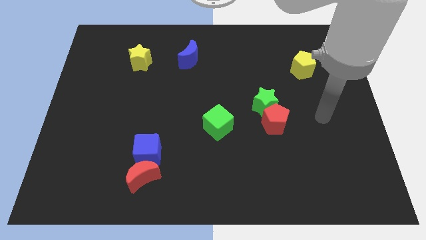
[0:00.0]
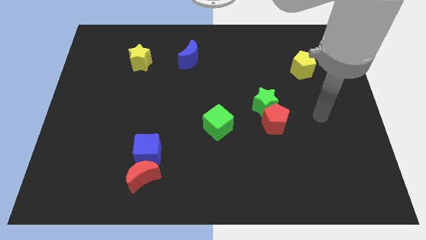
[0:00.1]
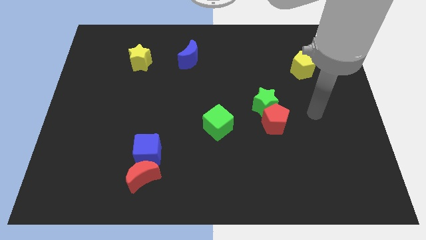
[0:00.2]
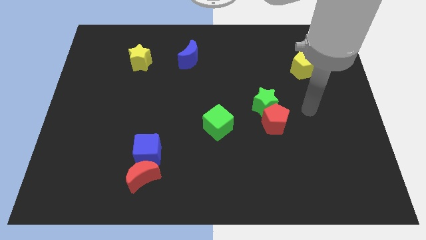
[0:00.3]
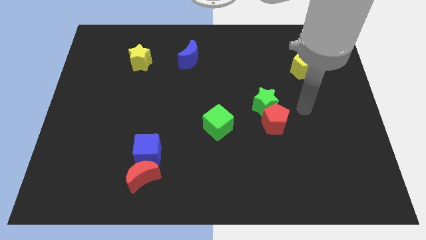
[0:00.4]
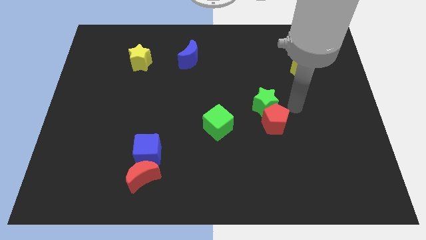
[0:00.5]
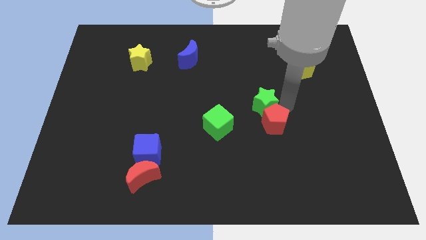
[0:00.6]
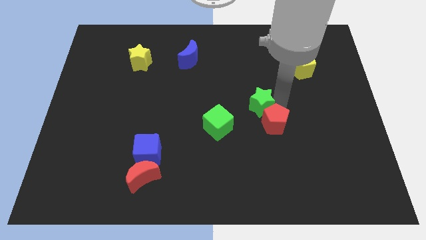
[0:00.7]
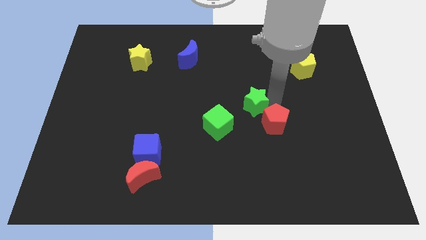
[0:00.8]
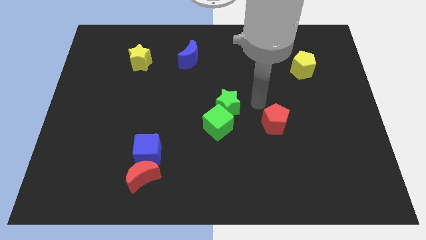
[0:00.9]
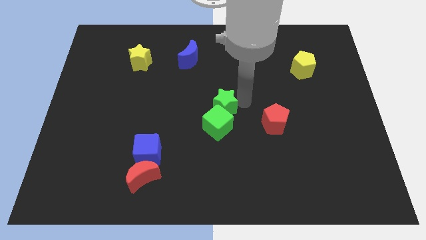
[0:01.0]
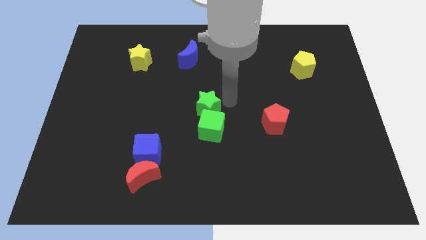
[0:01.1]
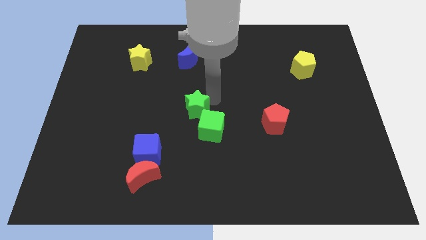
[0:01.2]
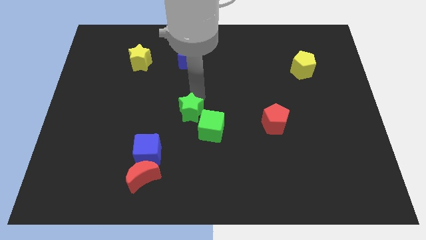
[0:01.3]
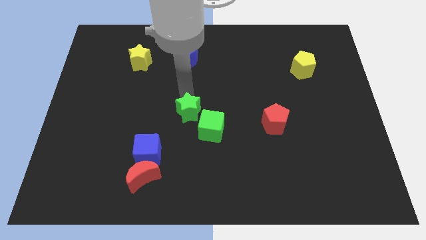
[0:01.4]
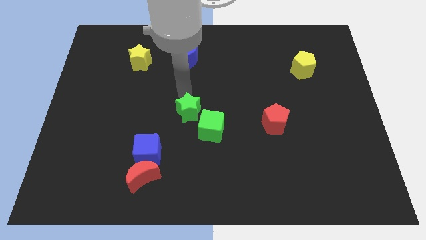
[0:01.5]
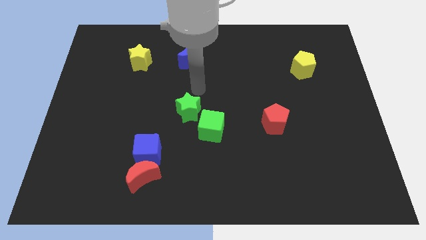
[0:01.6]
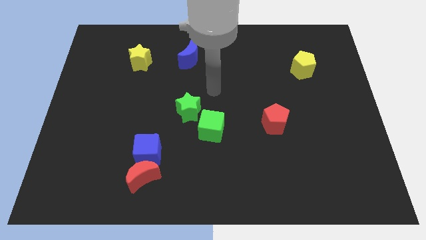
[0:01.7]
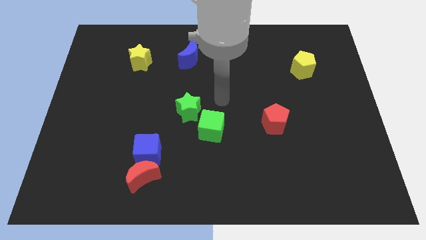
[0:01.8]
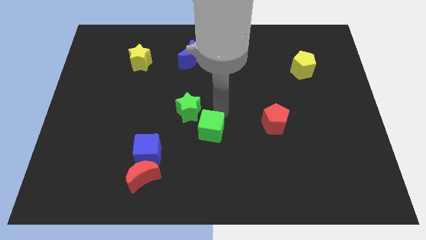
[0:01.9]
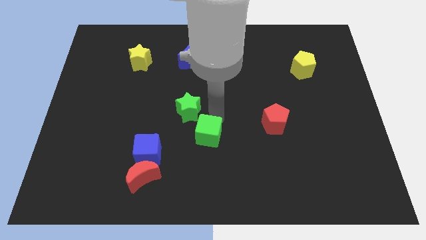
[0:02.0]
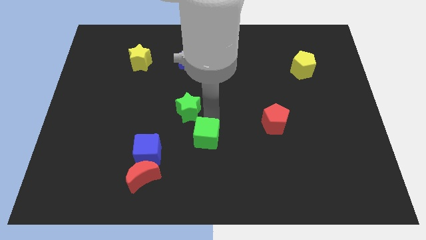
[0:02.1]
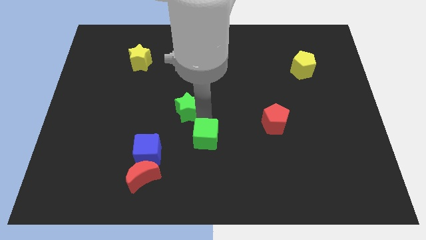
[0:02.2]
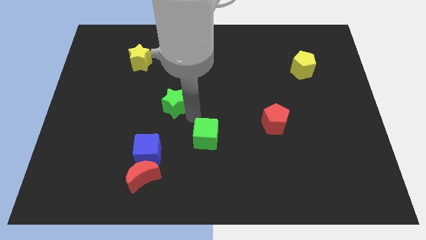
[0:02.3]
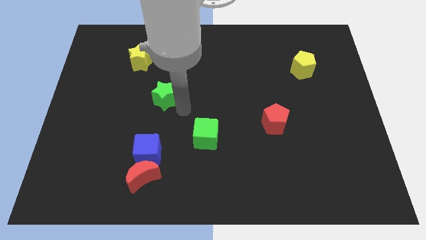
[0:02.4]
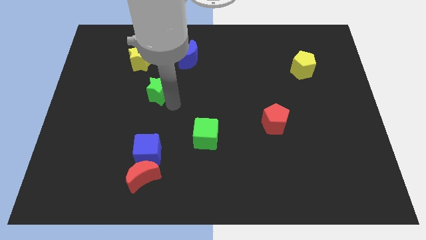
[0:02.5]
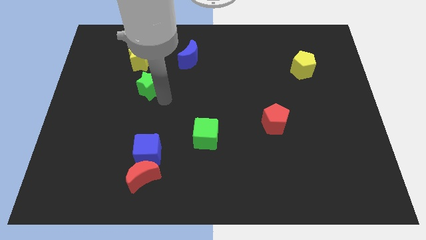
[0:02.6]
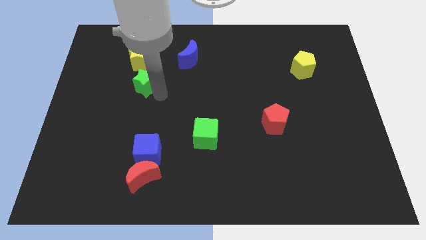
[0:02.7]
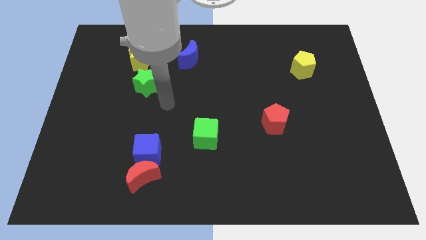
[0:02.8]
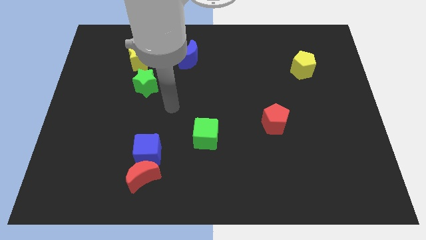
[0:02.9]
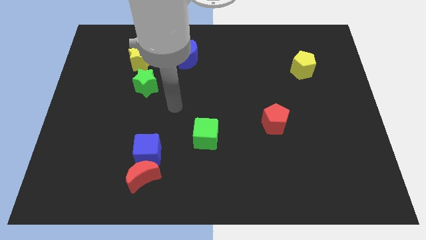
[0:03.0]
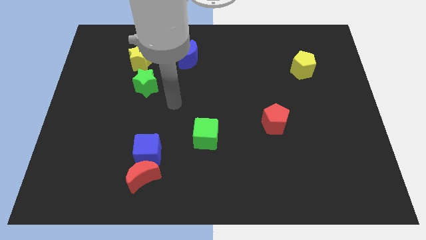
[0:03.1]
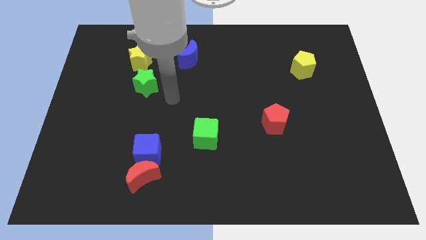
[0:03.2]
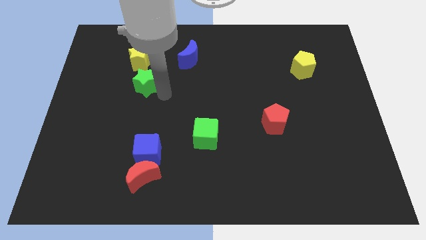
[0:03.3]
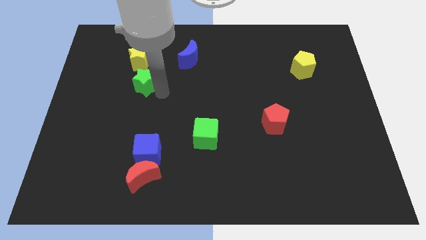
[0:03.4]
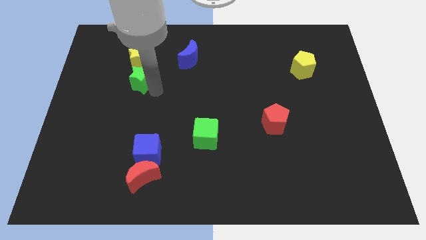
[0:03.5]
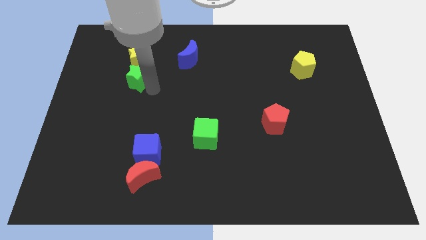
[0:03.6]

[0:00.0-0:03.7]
separate green star from red pentagon

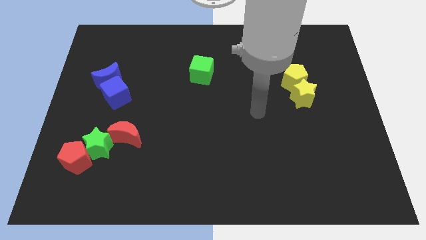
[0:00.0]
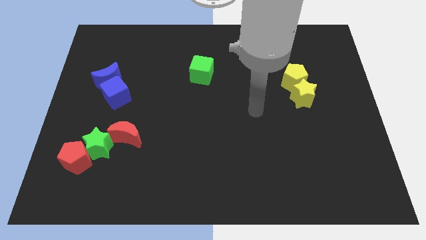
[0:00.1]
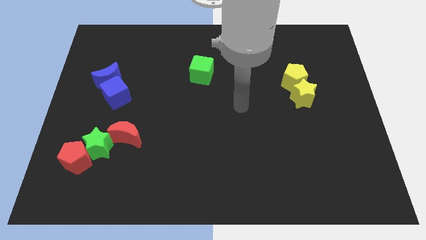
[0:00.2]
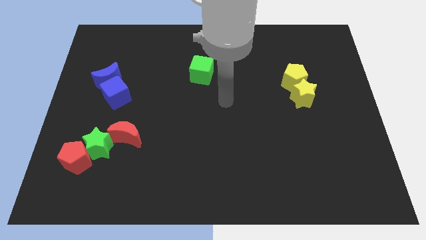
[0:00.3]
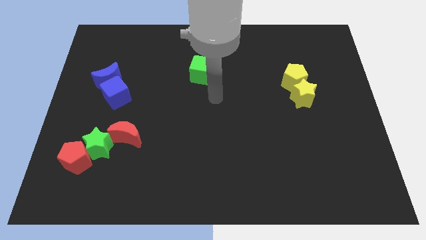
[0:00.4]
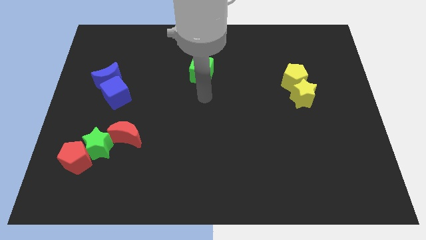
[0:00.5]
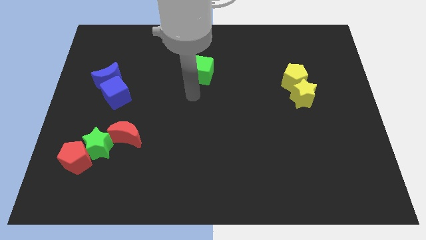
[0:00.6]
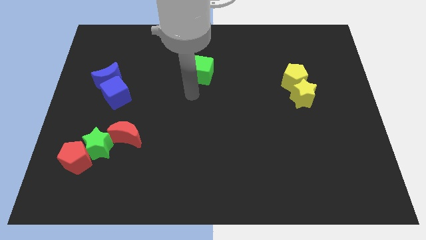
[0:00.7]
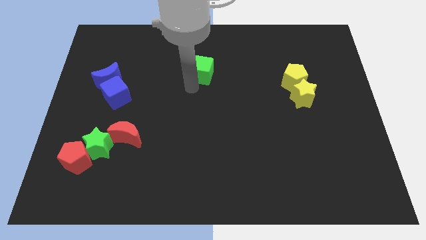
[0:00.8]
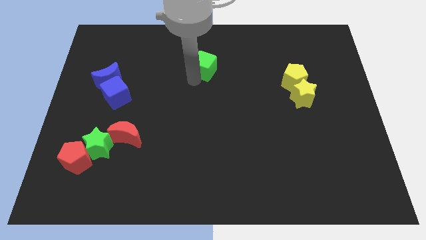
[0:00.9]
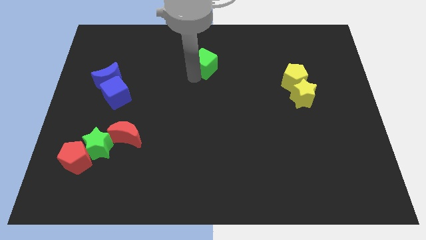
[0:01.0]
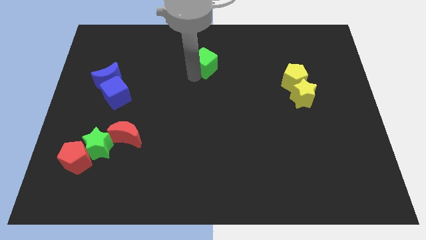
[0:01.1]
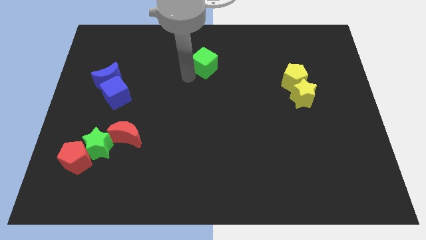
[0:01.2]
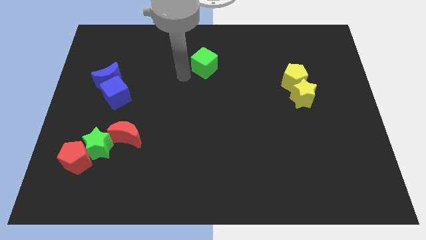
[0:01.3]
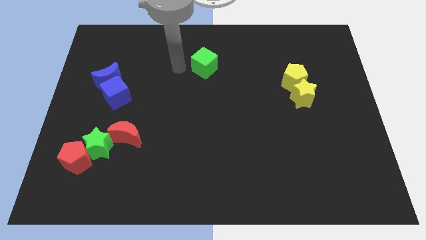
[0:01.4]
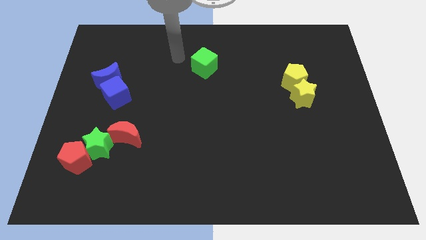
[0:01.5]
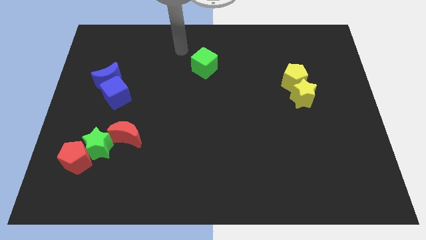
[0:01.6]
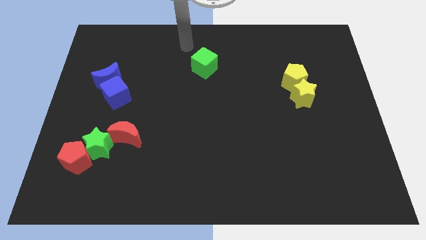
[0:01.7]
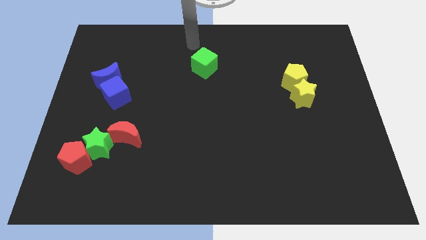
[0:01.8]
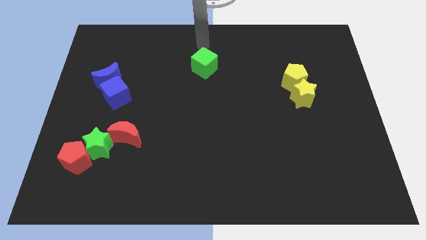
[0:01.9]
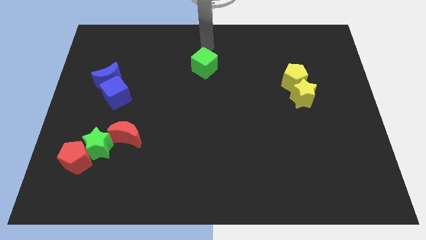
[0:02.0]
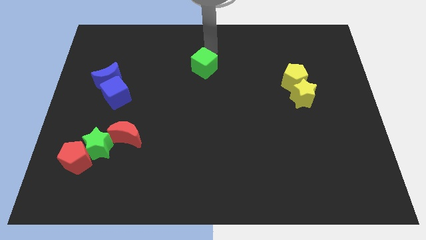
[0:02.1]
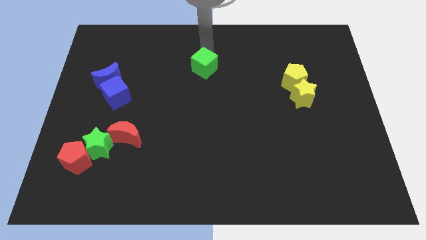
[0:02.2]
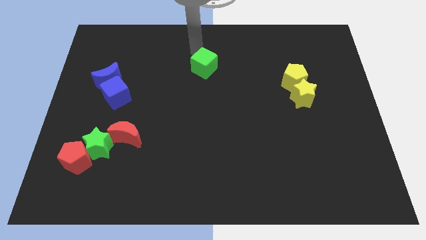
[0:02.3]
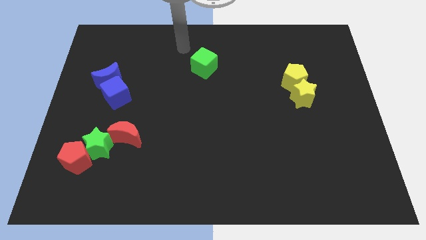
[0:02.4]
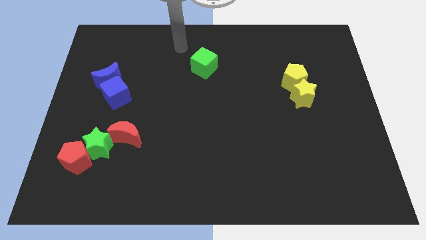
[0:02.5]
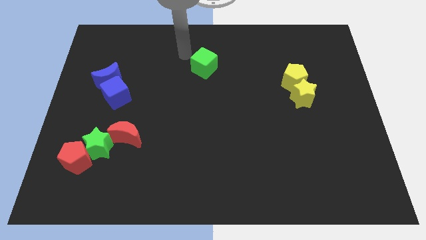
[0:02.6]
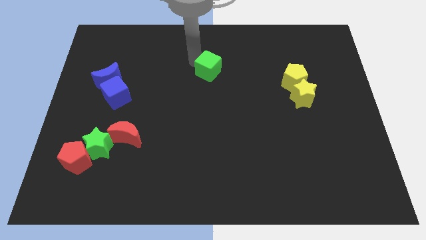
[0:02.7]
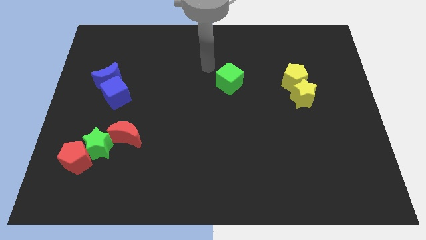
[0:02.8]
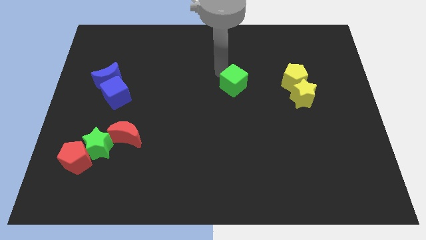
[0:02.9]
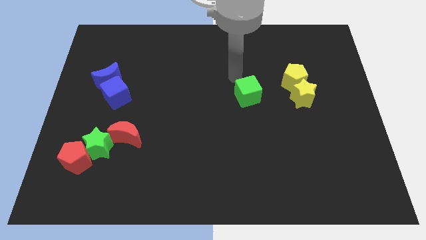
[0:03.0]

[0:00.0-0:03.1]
place the green cube to the left of the yellow star

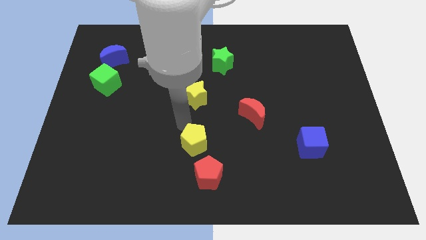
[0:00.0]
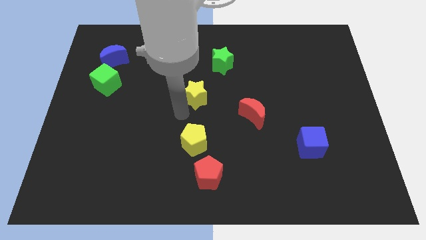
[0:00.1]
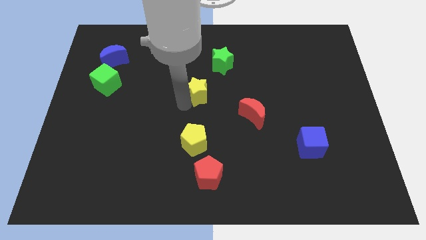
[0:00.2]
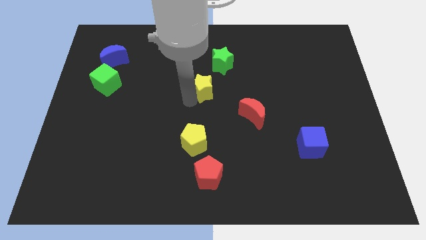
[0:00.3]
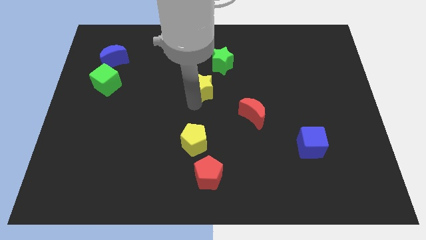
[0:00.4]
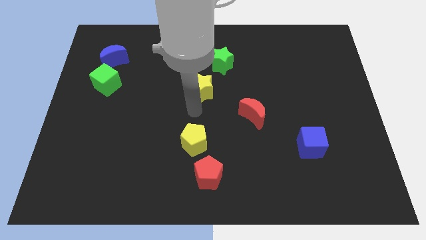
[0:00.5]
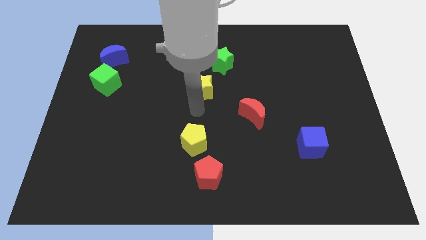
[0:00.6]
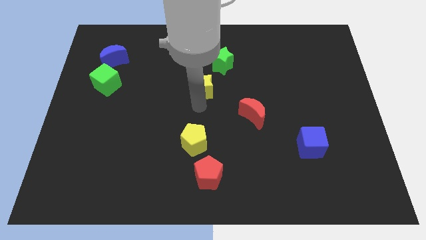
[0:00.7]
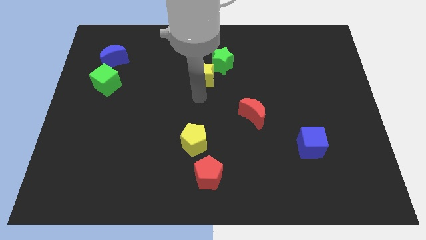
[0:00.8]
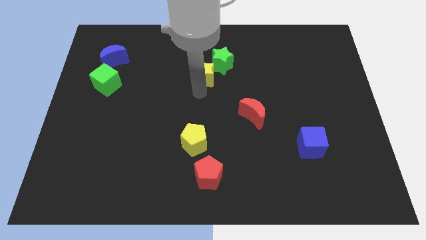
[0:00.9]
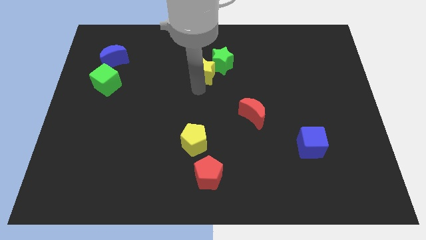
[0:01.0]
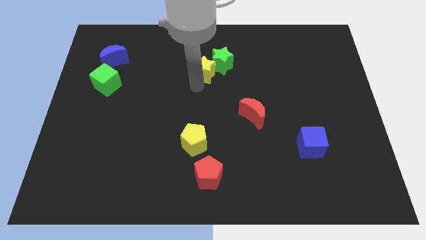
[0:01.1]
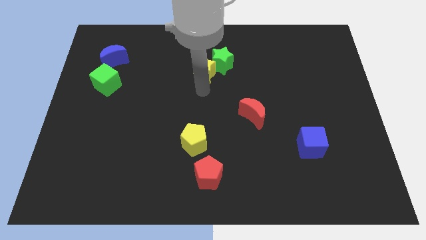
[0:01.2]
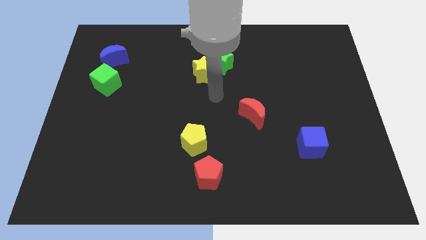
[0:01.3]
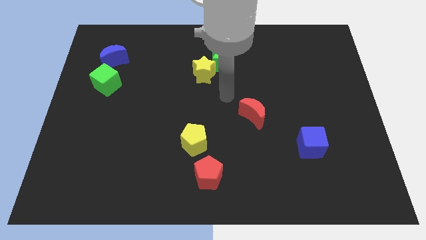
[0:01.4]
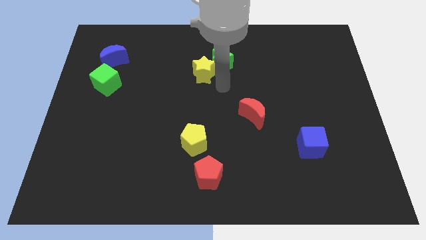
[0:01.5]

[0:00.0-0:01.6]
move the yellow star up slightly closer to the green star

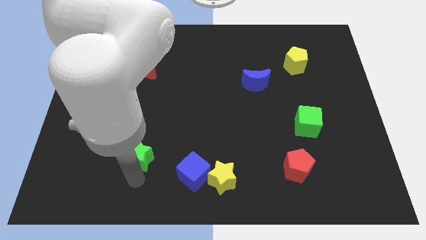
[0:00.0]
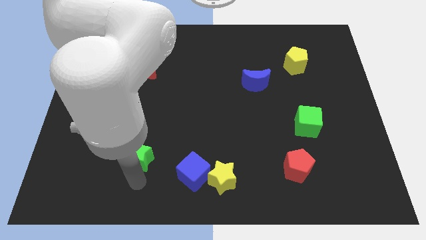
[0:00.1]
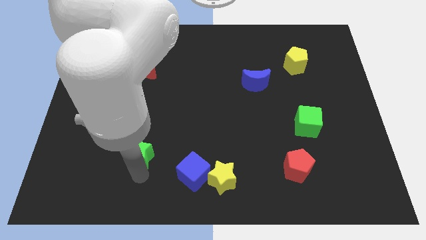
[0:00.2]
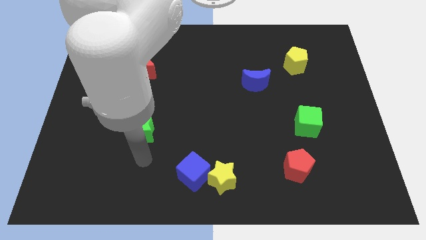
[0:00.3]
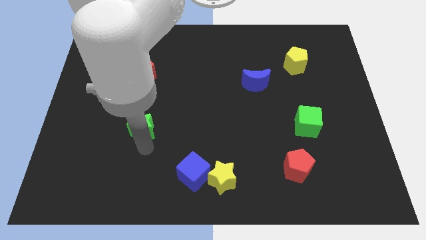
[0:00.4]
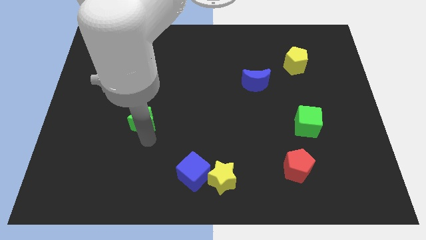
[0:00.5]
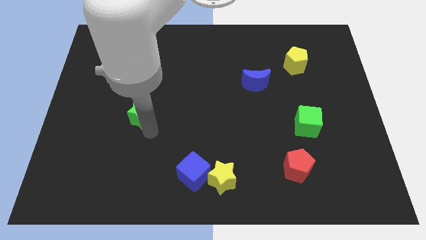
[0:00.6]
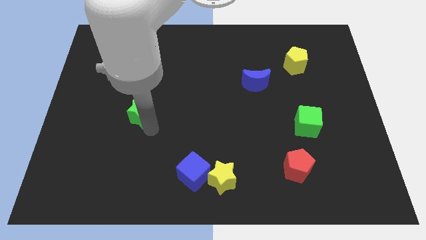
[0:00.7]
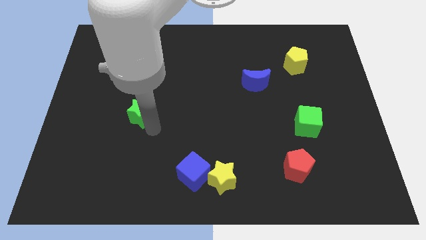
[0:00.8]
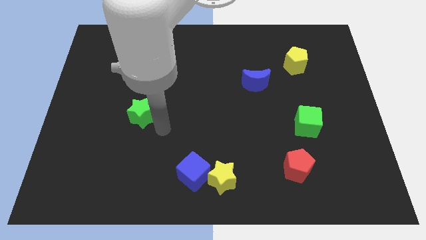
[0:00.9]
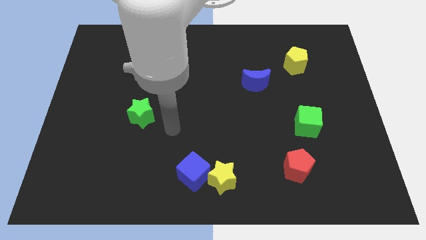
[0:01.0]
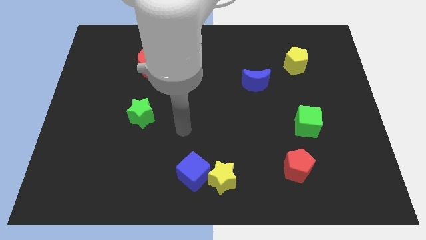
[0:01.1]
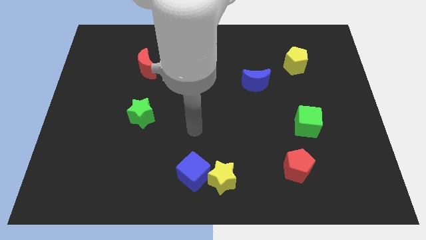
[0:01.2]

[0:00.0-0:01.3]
push the green star towards the red moon
